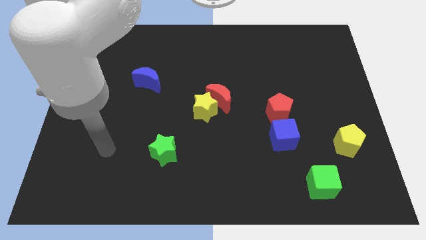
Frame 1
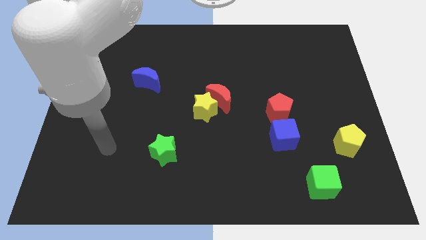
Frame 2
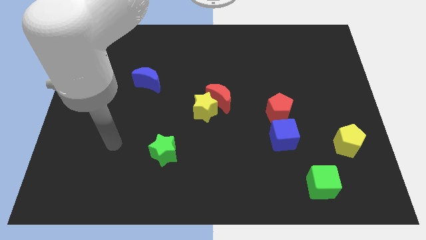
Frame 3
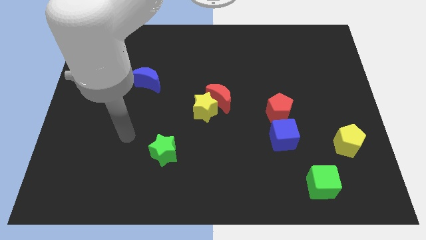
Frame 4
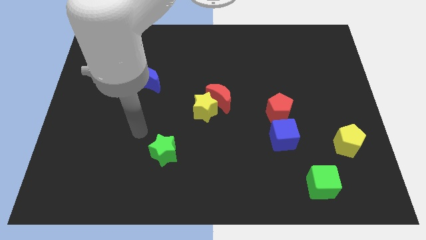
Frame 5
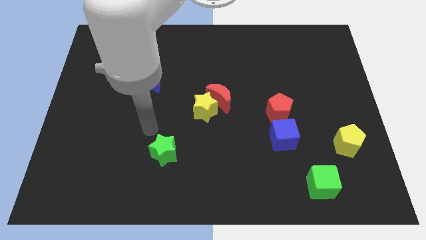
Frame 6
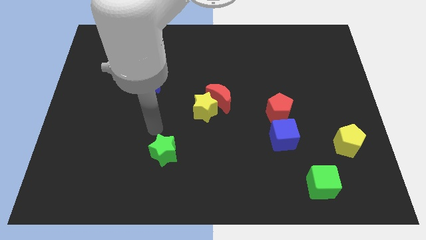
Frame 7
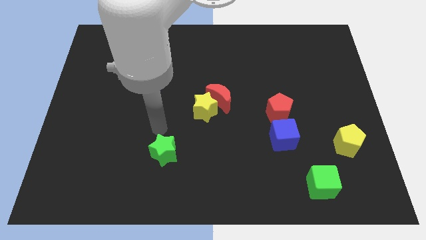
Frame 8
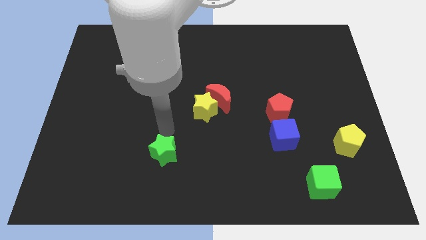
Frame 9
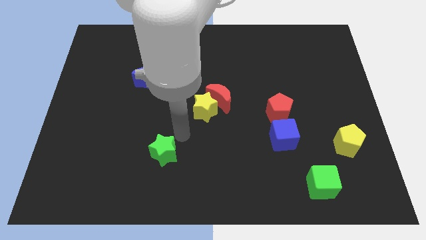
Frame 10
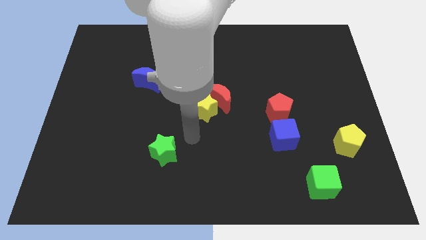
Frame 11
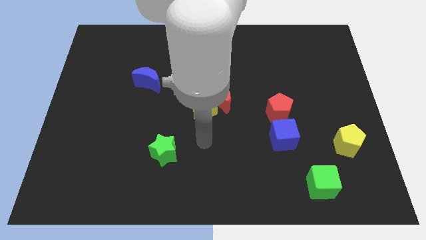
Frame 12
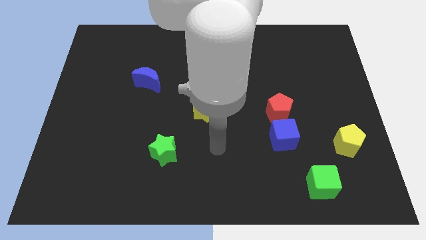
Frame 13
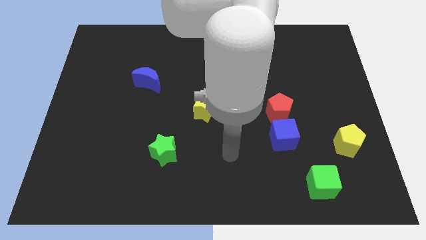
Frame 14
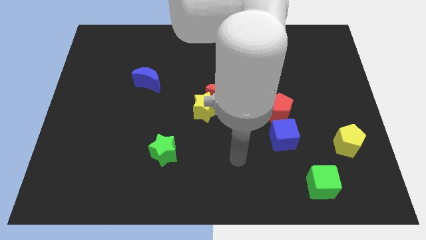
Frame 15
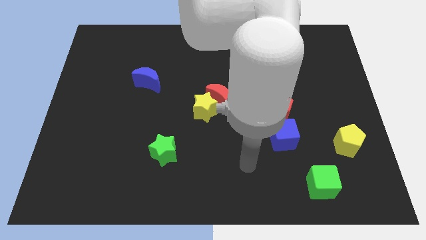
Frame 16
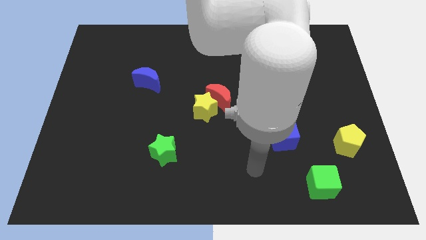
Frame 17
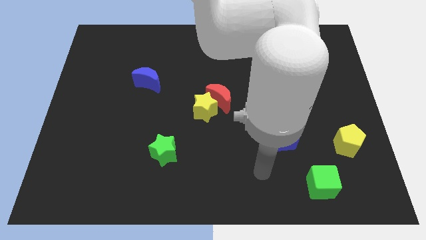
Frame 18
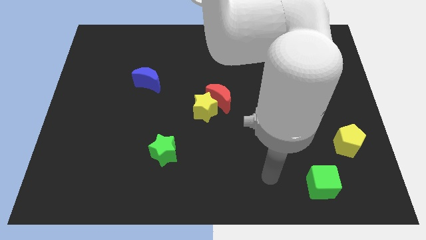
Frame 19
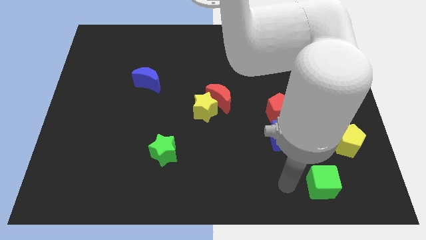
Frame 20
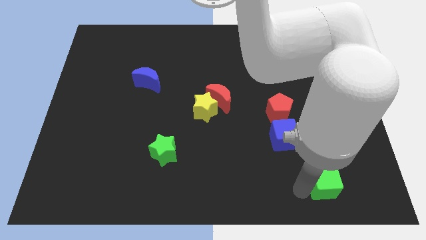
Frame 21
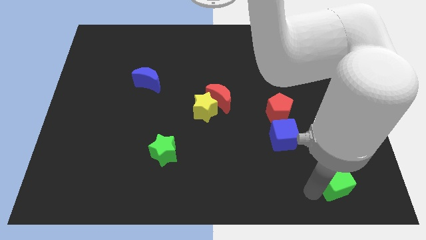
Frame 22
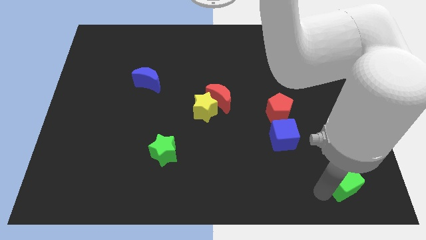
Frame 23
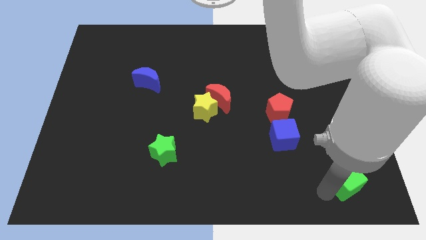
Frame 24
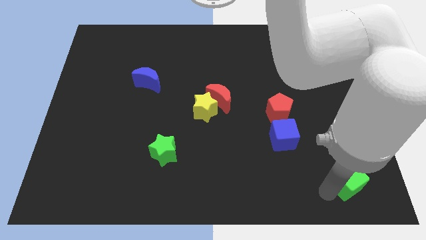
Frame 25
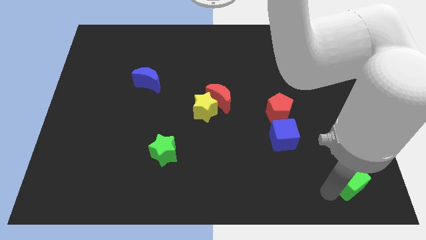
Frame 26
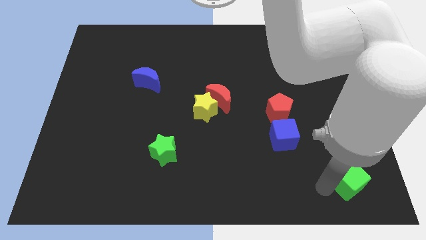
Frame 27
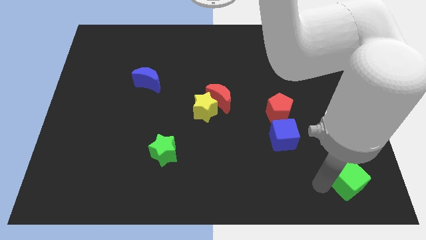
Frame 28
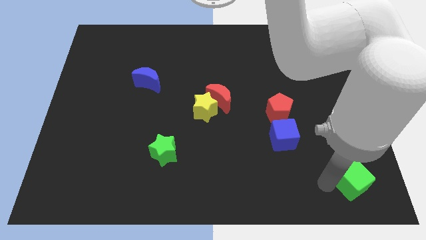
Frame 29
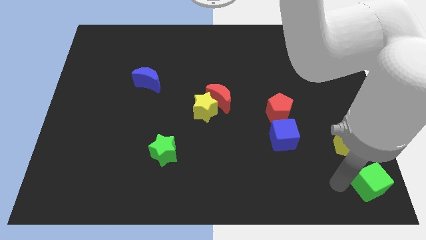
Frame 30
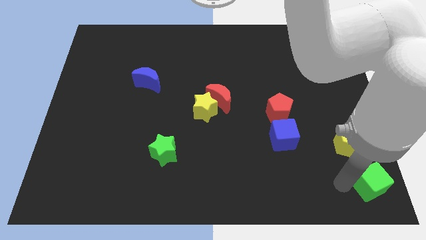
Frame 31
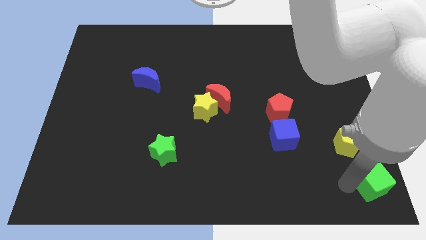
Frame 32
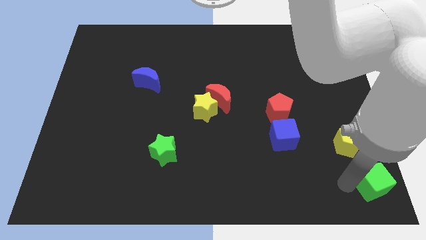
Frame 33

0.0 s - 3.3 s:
move the green cube to the bottom right corner

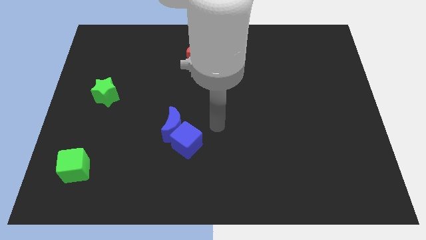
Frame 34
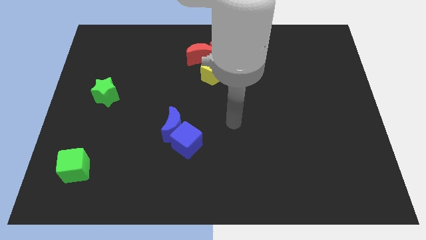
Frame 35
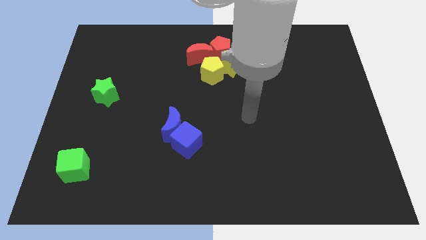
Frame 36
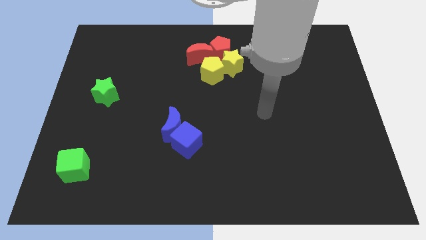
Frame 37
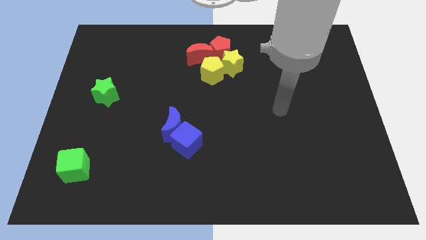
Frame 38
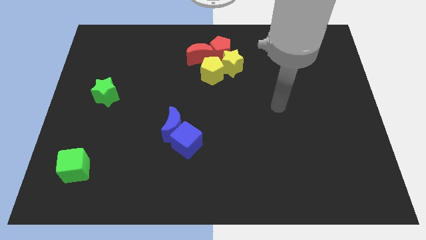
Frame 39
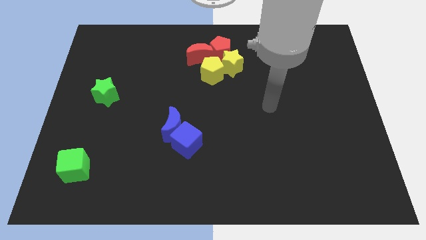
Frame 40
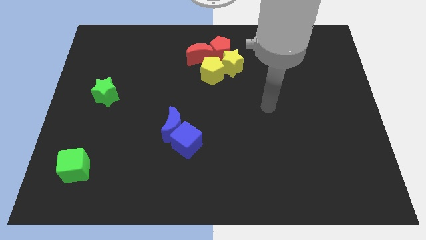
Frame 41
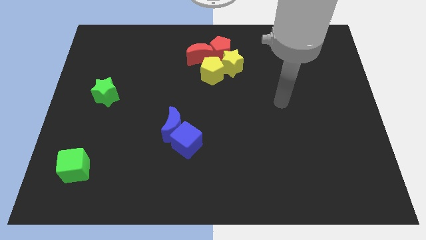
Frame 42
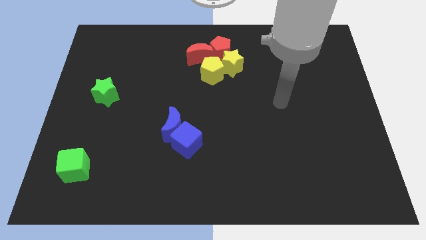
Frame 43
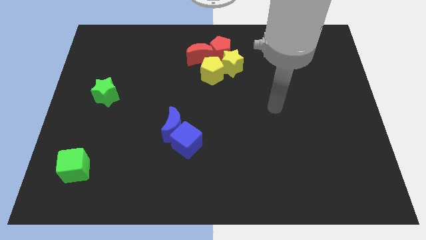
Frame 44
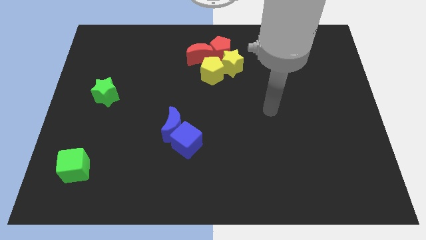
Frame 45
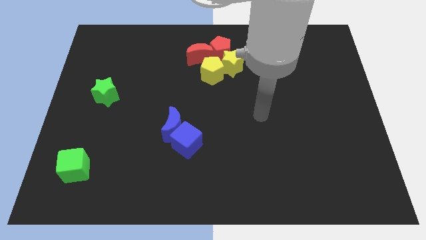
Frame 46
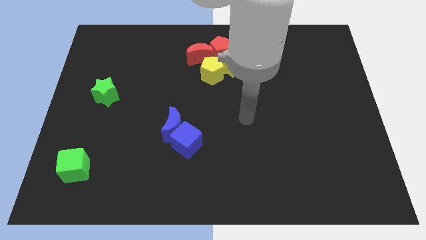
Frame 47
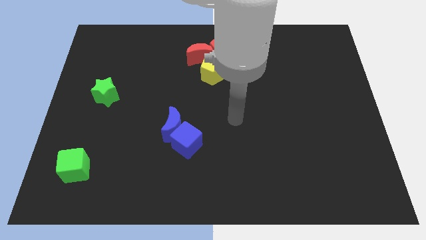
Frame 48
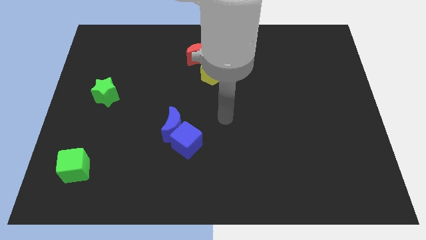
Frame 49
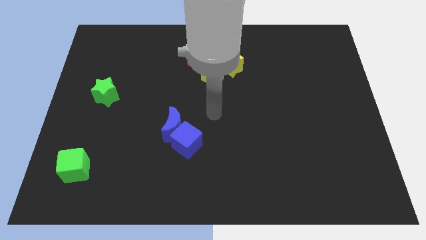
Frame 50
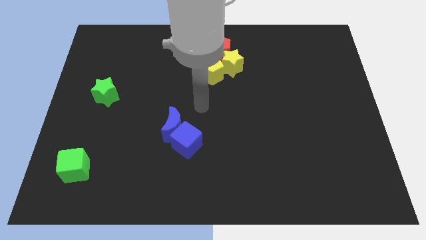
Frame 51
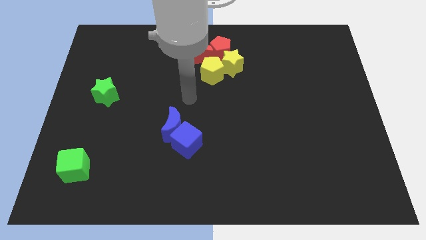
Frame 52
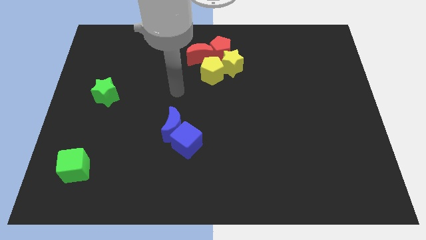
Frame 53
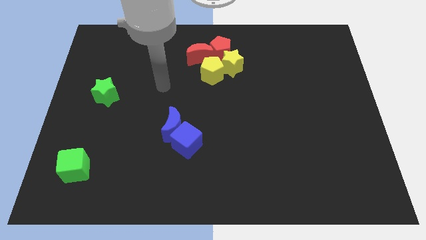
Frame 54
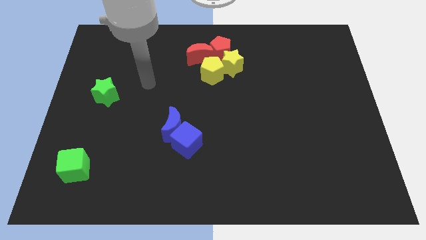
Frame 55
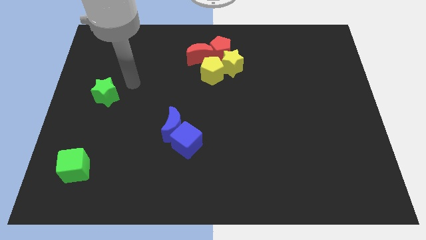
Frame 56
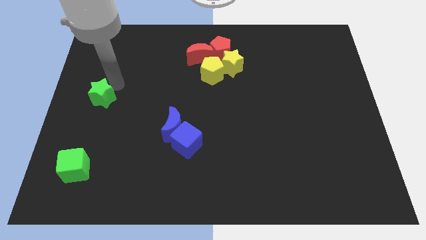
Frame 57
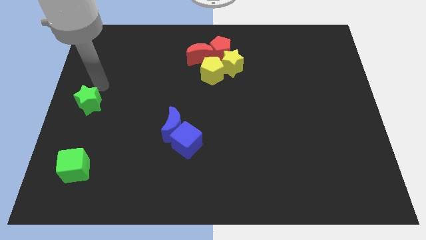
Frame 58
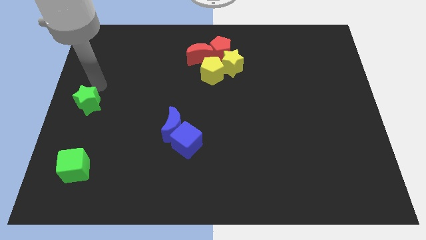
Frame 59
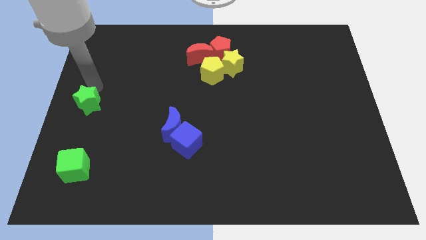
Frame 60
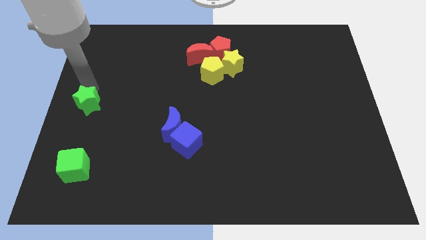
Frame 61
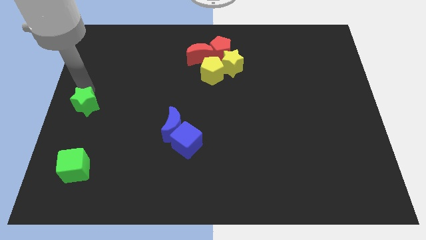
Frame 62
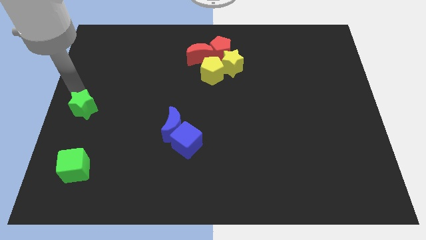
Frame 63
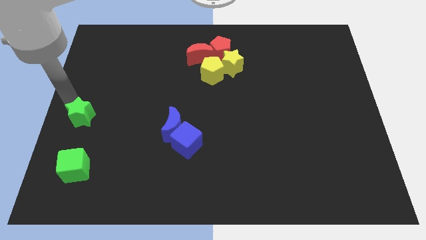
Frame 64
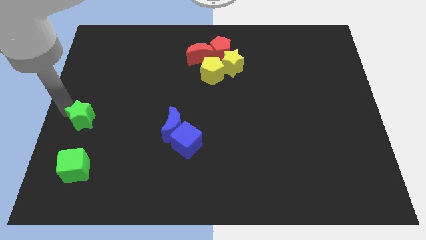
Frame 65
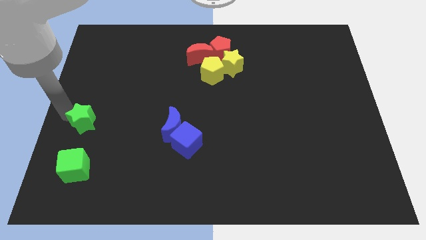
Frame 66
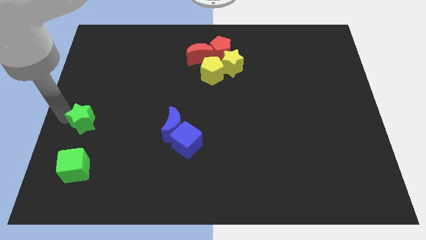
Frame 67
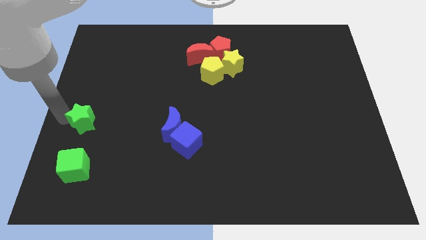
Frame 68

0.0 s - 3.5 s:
place the green star towards the top of the green cube

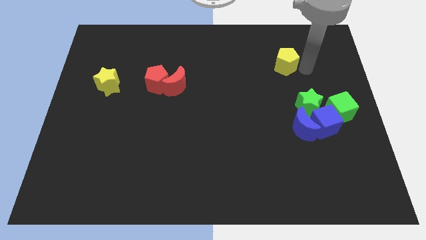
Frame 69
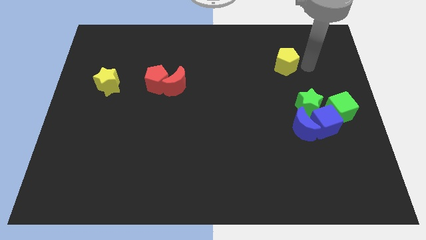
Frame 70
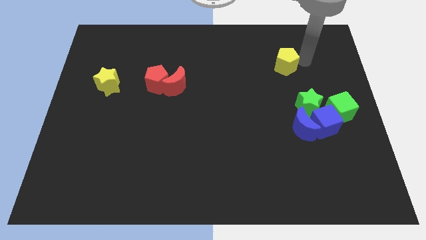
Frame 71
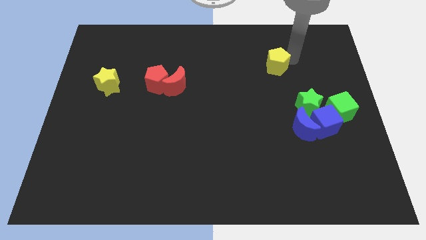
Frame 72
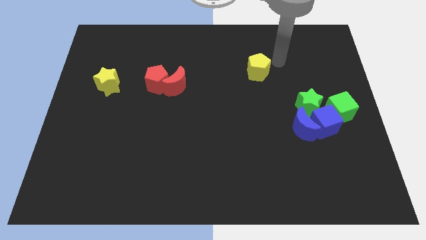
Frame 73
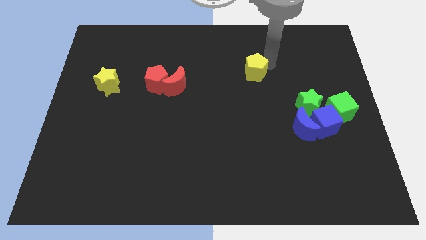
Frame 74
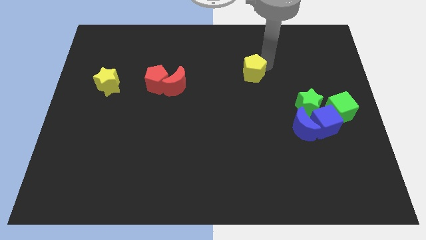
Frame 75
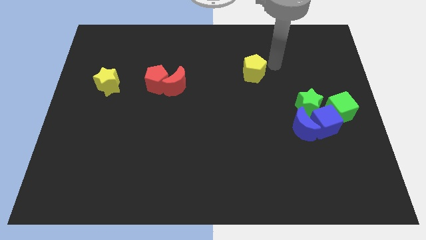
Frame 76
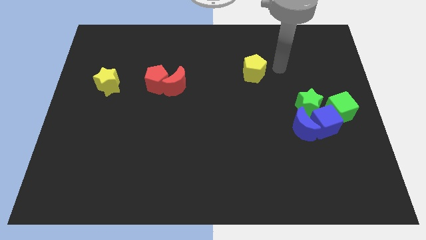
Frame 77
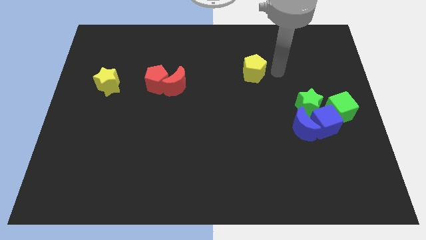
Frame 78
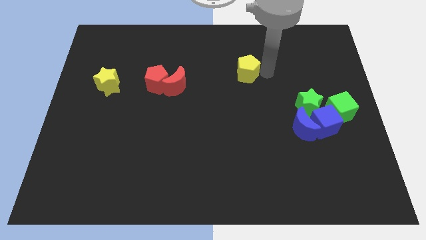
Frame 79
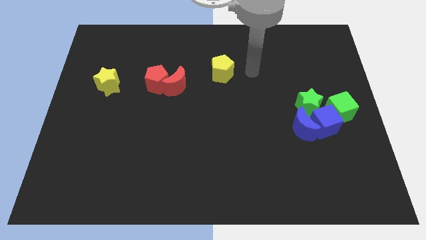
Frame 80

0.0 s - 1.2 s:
drag the yellow pentagon to the center

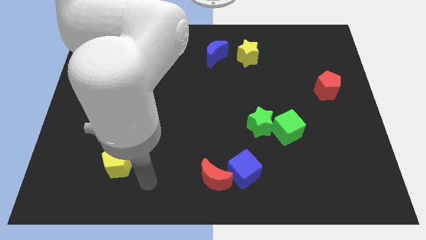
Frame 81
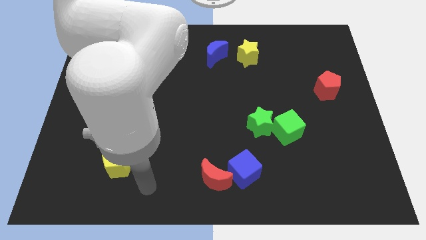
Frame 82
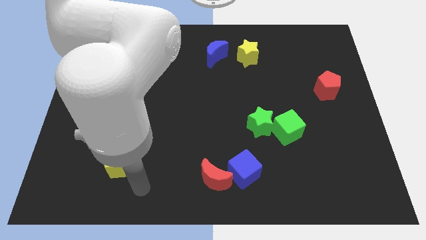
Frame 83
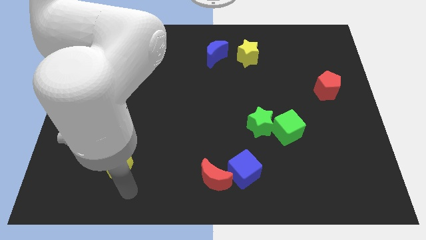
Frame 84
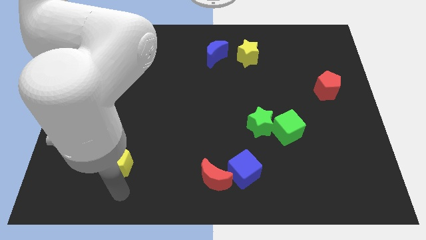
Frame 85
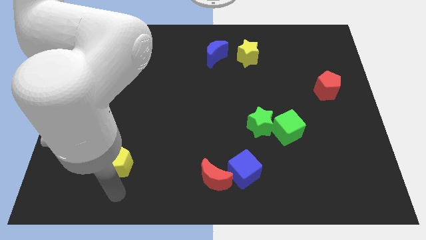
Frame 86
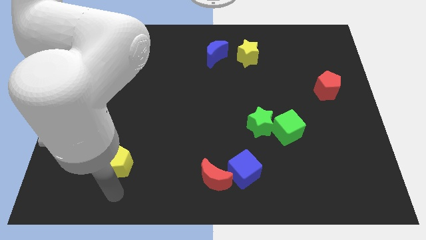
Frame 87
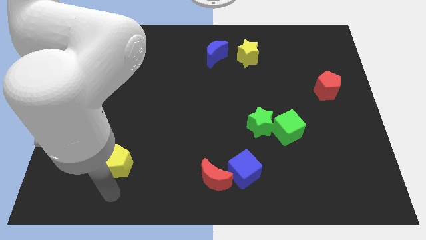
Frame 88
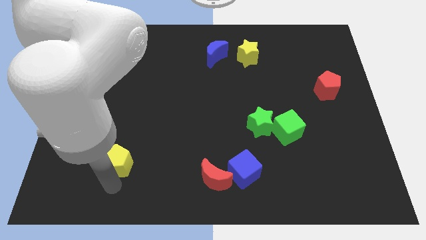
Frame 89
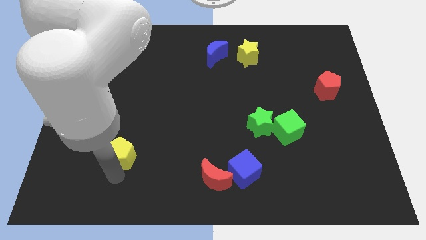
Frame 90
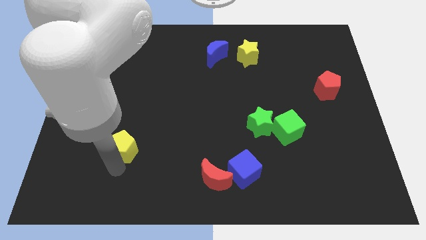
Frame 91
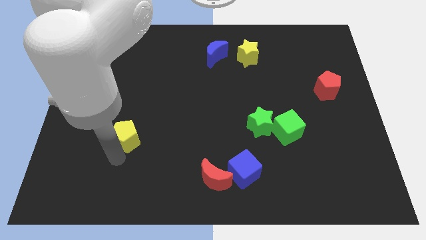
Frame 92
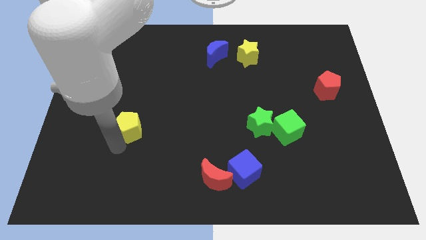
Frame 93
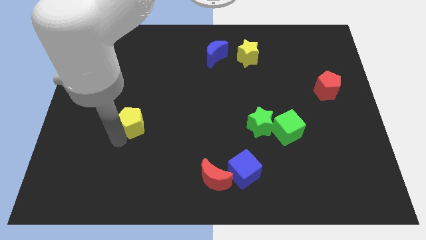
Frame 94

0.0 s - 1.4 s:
place the yellow pentagon parallel left of the green star
